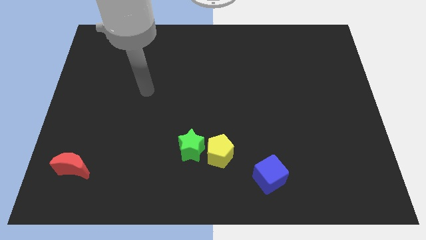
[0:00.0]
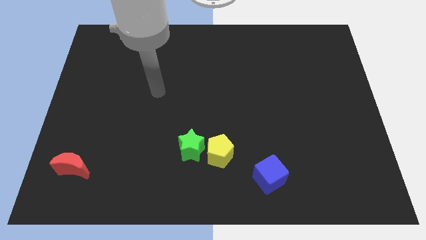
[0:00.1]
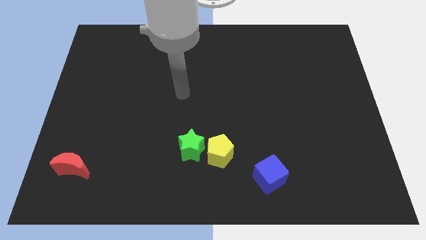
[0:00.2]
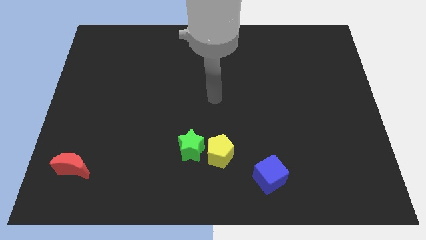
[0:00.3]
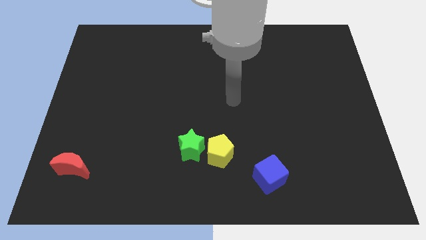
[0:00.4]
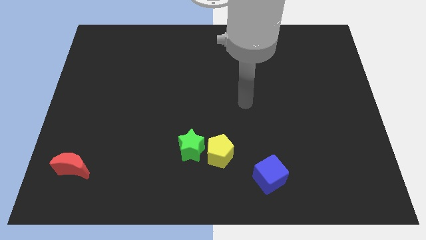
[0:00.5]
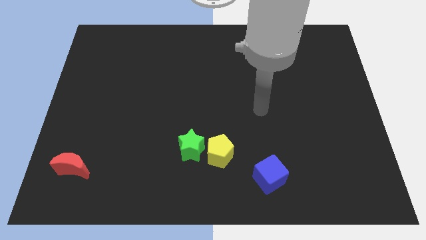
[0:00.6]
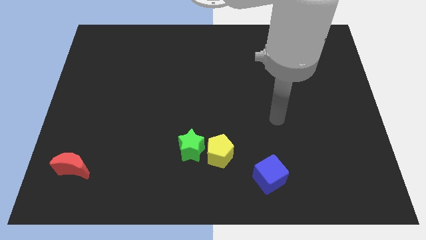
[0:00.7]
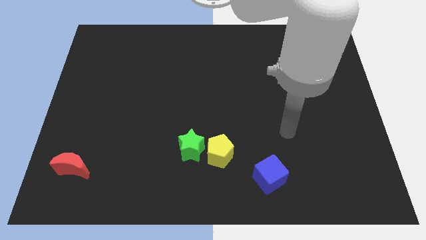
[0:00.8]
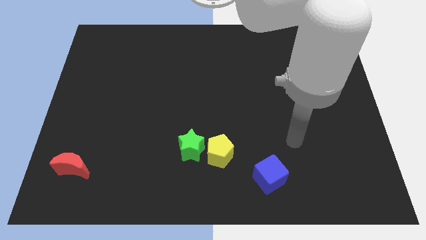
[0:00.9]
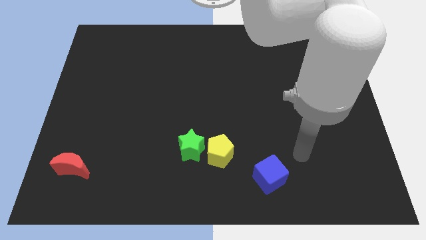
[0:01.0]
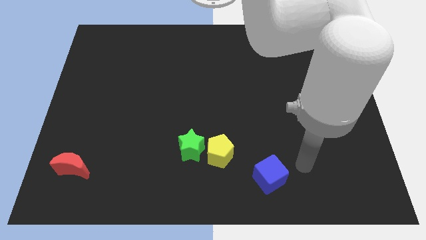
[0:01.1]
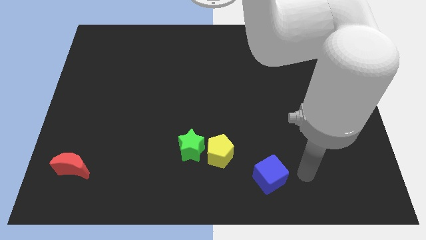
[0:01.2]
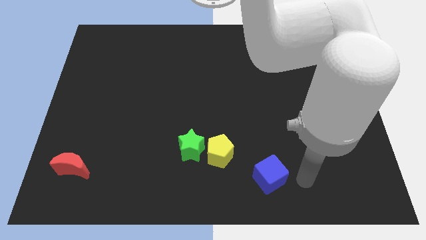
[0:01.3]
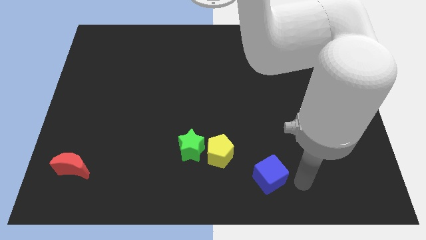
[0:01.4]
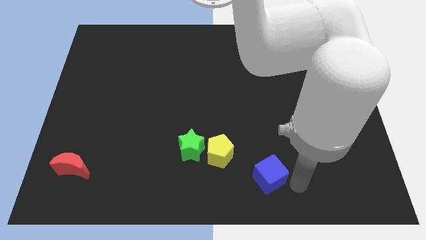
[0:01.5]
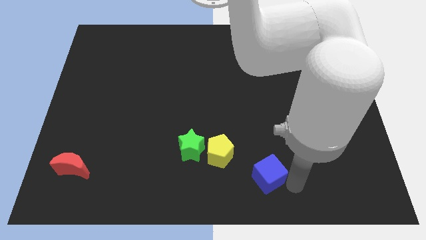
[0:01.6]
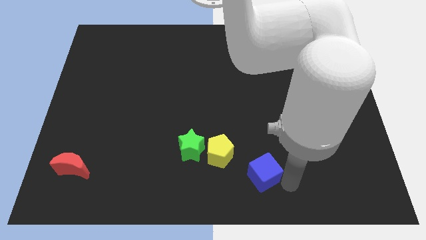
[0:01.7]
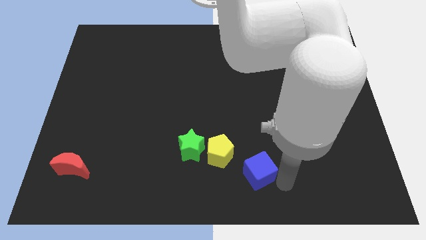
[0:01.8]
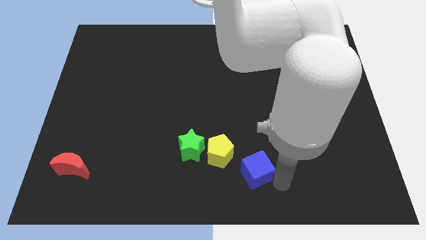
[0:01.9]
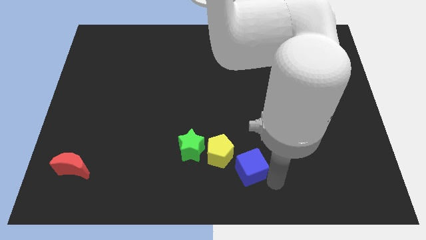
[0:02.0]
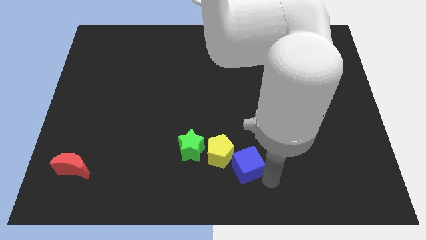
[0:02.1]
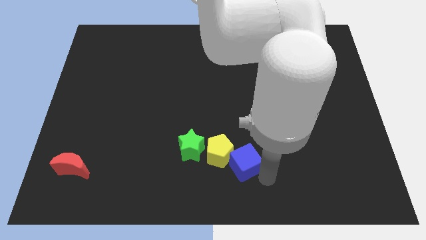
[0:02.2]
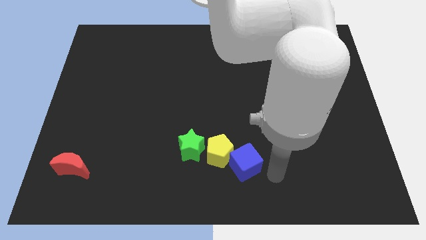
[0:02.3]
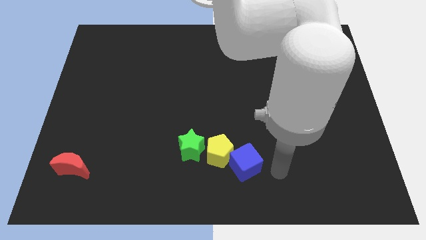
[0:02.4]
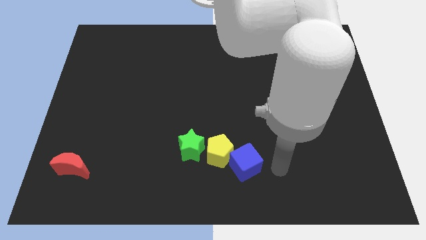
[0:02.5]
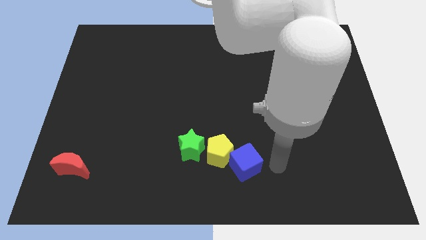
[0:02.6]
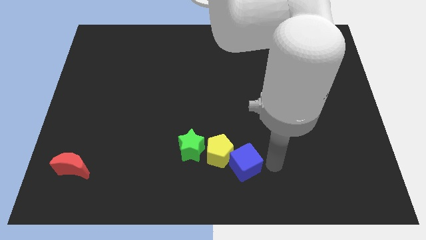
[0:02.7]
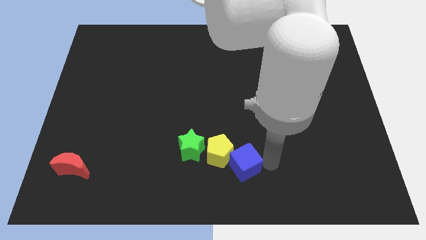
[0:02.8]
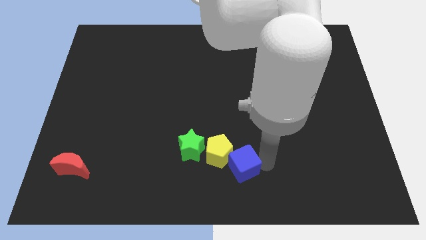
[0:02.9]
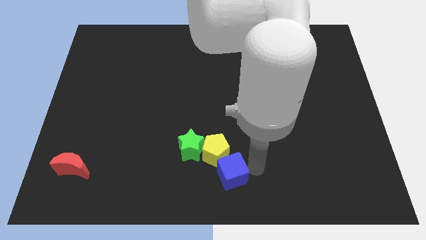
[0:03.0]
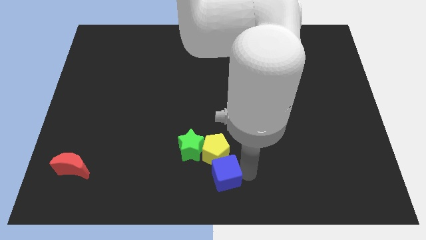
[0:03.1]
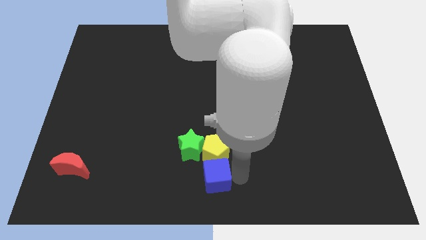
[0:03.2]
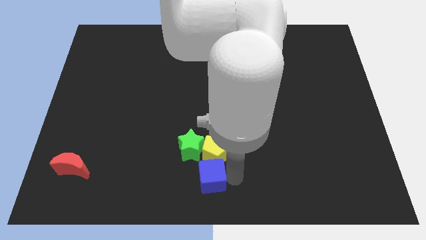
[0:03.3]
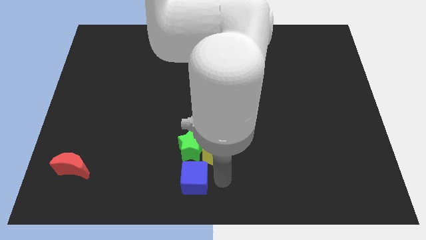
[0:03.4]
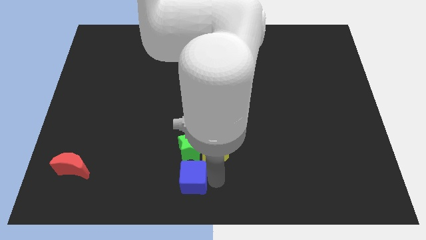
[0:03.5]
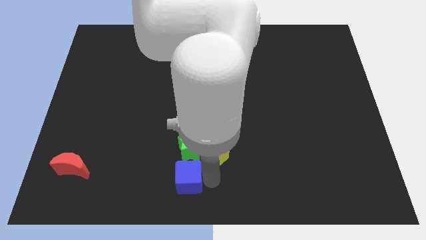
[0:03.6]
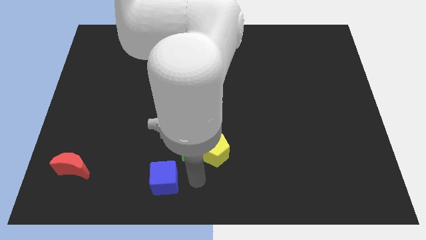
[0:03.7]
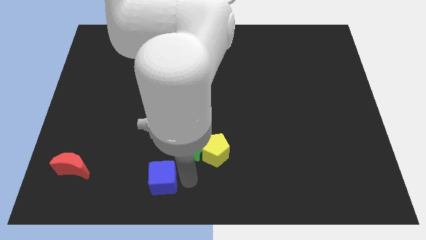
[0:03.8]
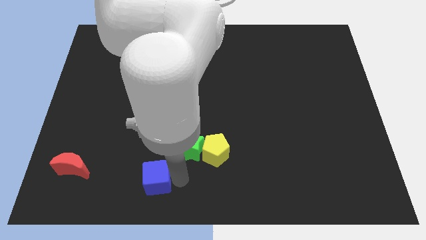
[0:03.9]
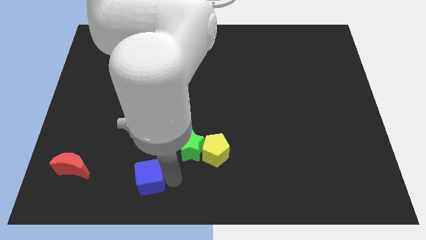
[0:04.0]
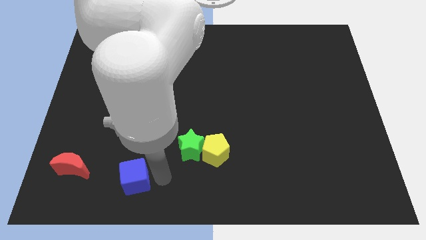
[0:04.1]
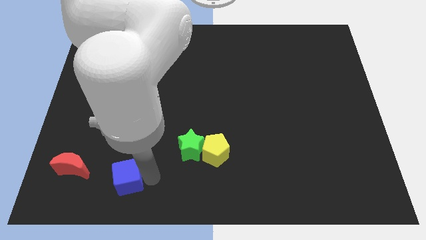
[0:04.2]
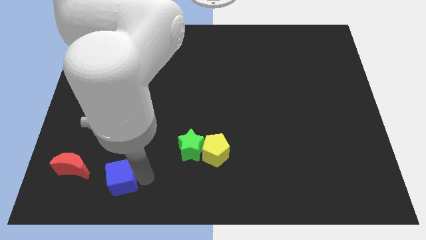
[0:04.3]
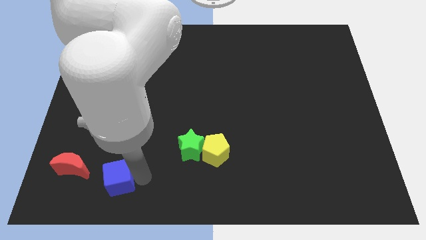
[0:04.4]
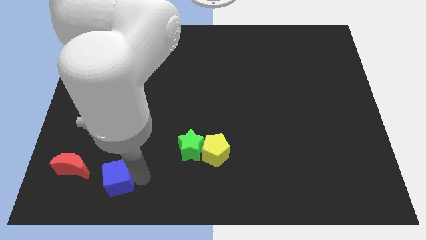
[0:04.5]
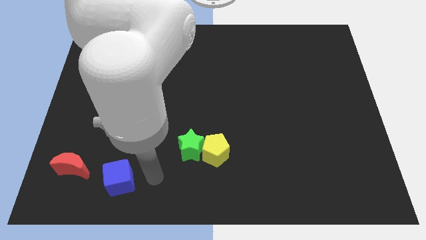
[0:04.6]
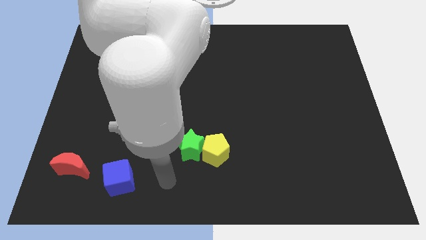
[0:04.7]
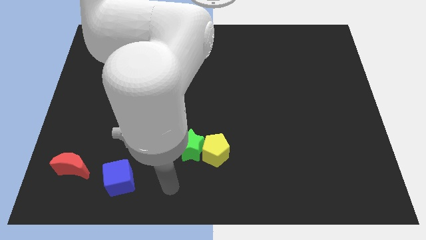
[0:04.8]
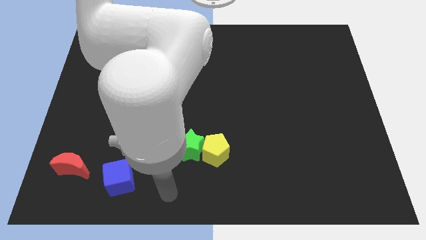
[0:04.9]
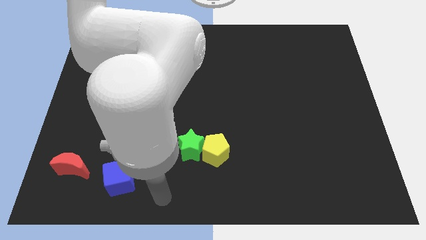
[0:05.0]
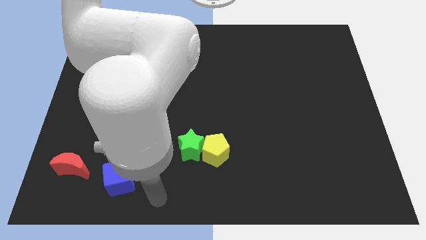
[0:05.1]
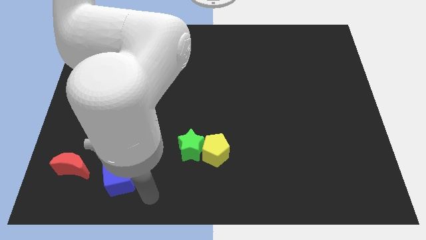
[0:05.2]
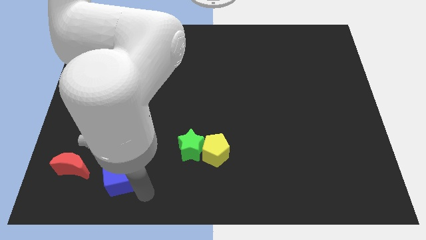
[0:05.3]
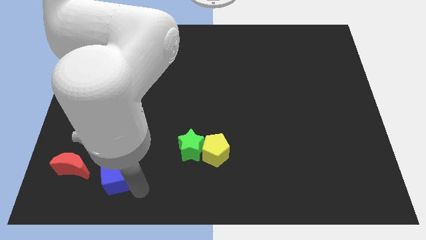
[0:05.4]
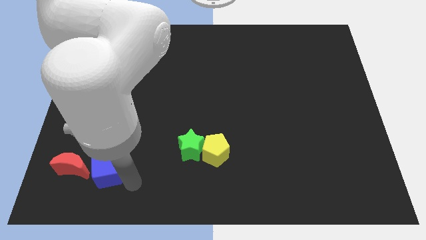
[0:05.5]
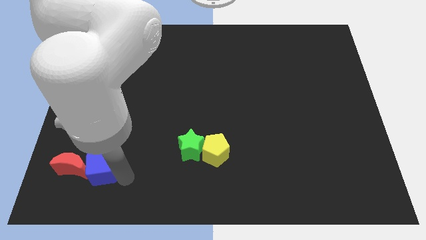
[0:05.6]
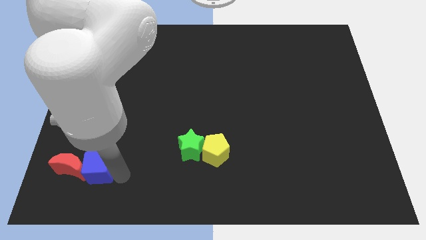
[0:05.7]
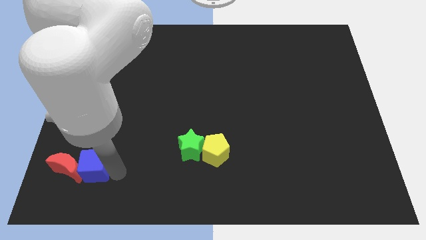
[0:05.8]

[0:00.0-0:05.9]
put the cube to the red moon

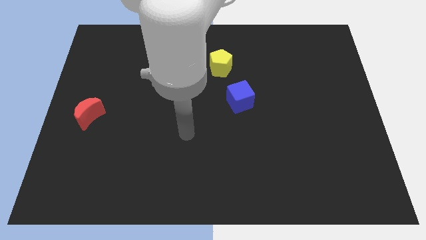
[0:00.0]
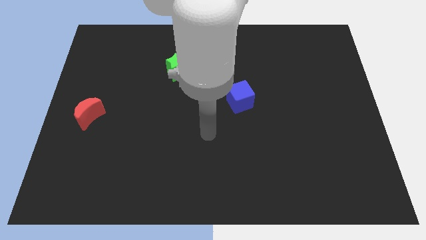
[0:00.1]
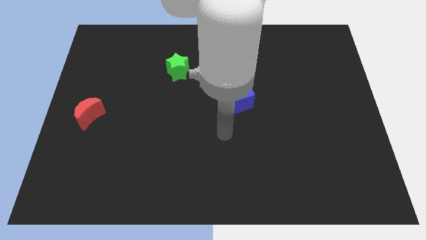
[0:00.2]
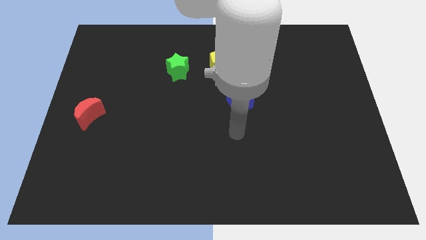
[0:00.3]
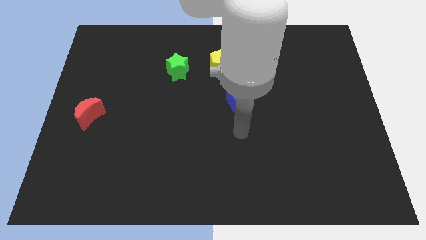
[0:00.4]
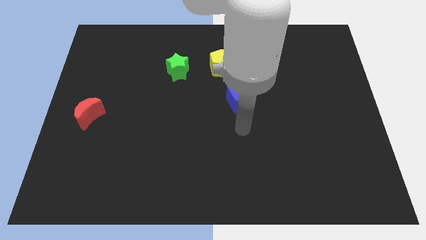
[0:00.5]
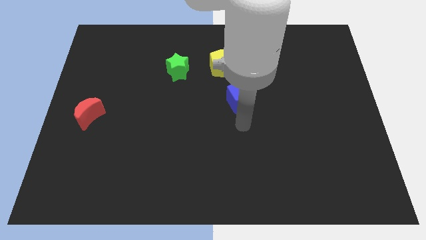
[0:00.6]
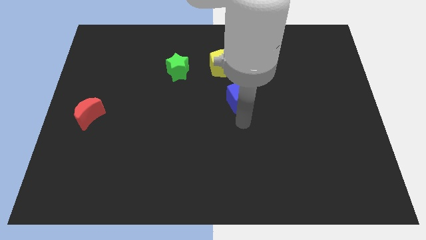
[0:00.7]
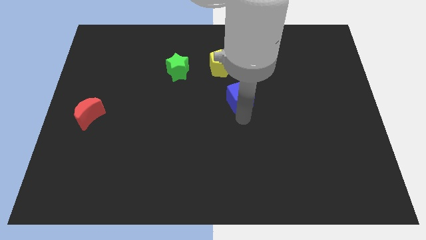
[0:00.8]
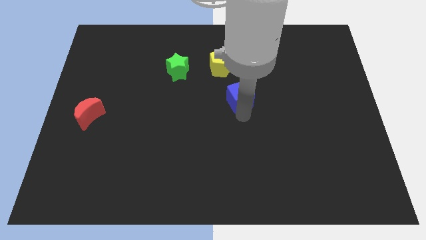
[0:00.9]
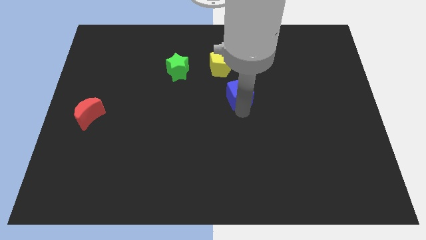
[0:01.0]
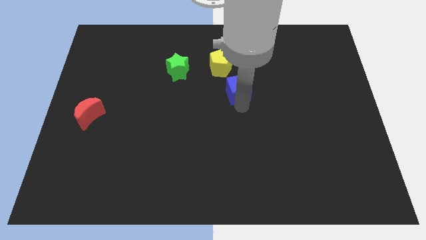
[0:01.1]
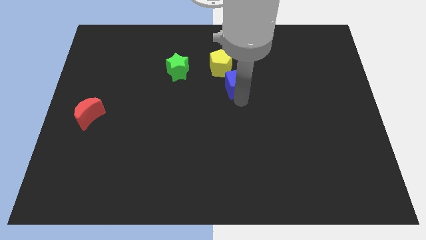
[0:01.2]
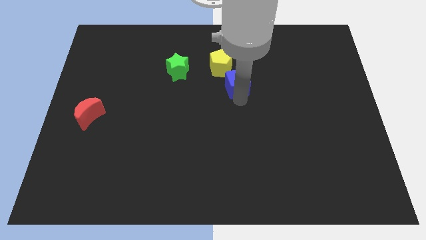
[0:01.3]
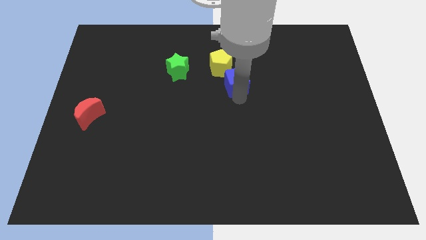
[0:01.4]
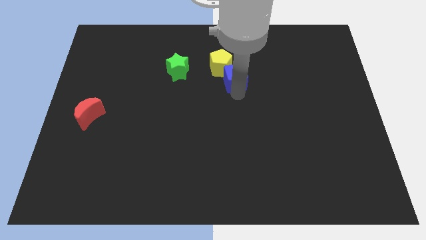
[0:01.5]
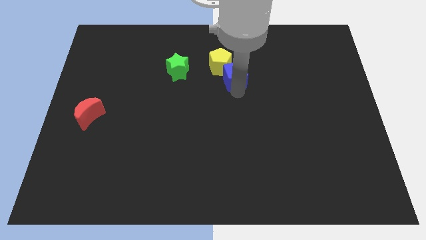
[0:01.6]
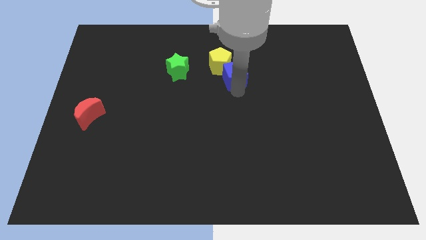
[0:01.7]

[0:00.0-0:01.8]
push the blue block towards the yellow block

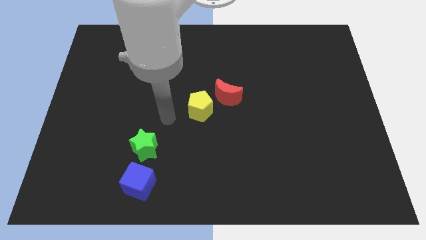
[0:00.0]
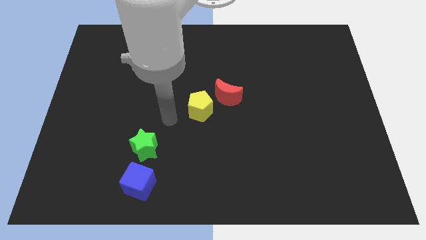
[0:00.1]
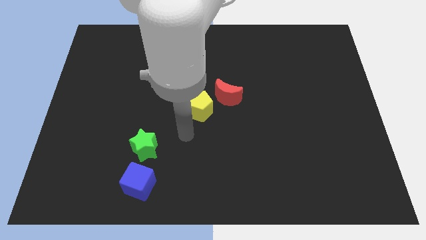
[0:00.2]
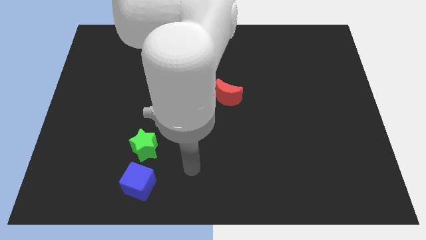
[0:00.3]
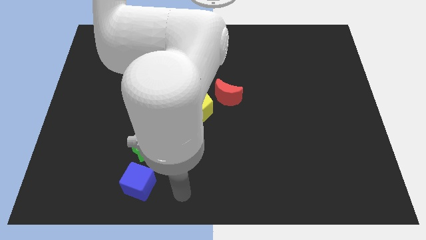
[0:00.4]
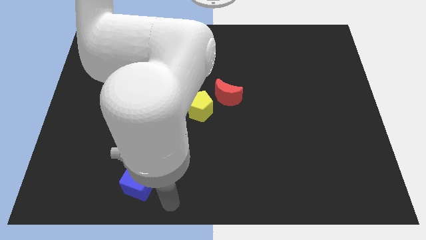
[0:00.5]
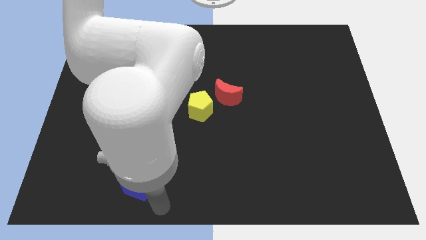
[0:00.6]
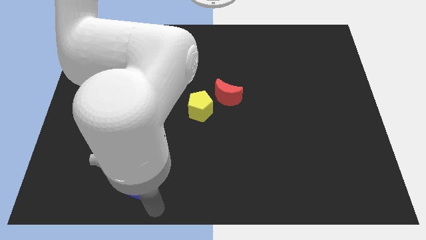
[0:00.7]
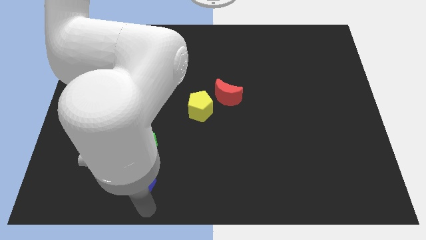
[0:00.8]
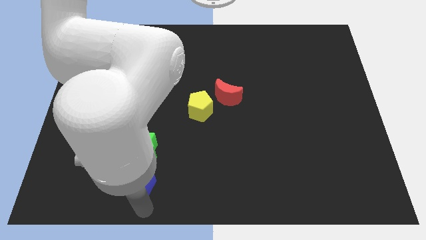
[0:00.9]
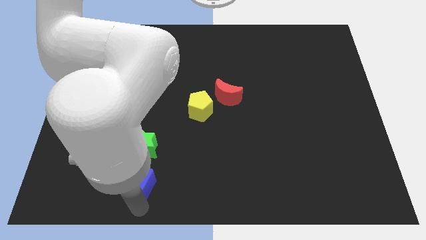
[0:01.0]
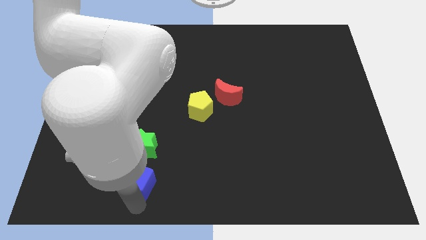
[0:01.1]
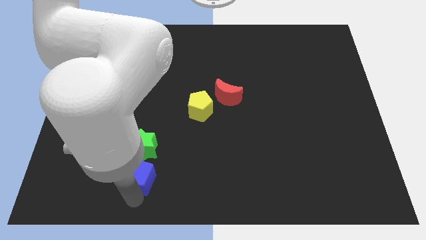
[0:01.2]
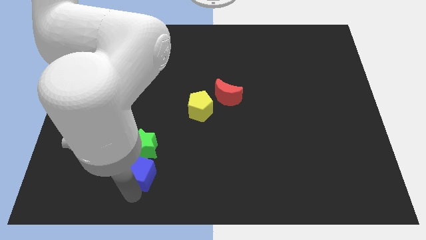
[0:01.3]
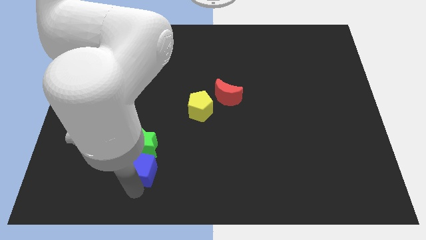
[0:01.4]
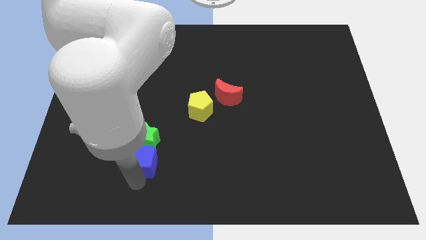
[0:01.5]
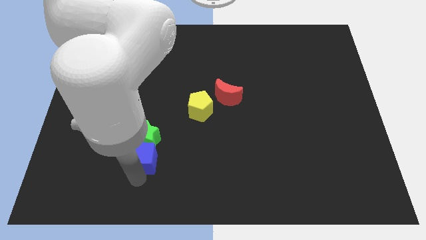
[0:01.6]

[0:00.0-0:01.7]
put the cube next to the green block
